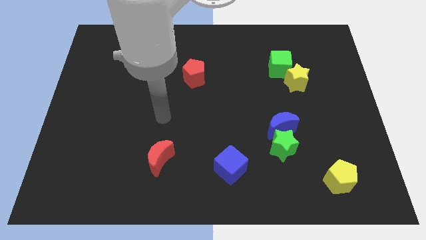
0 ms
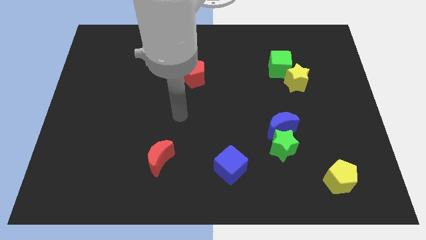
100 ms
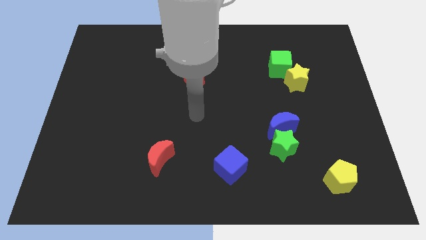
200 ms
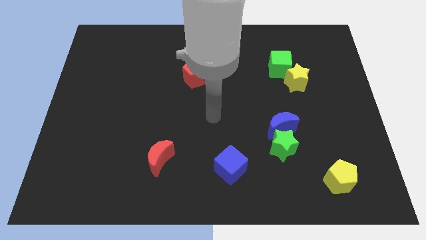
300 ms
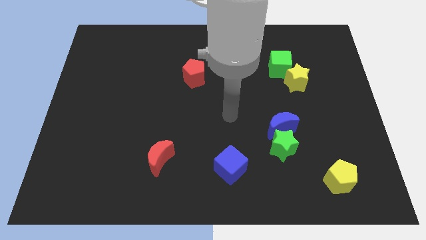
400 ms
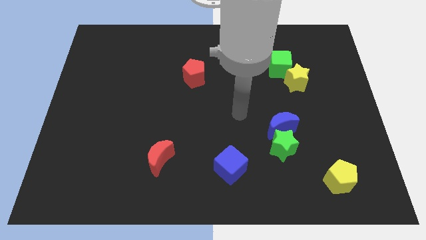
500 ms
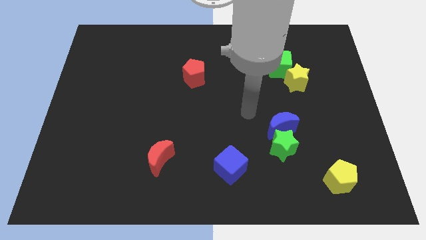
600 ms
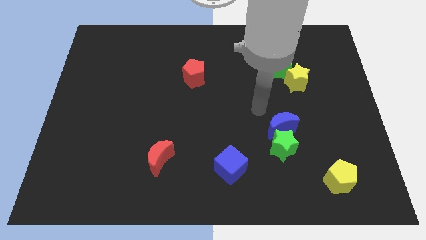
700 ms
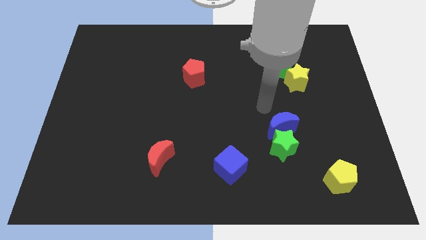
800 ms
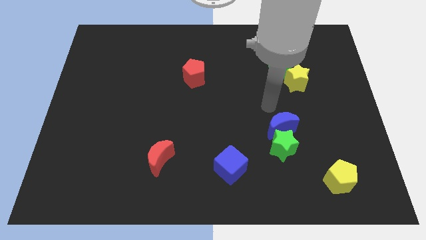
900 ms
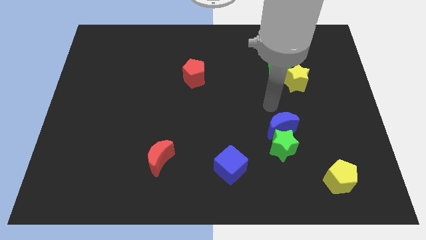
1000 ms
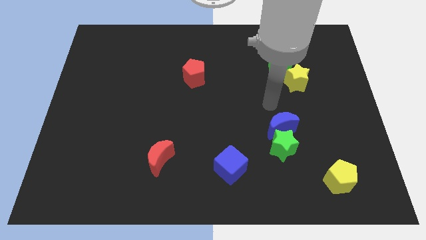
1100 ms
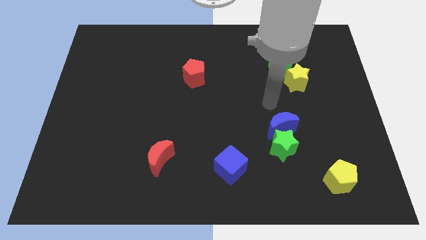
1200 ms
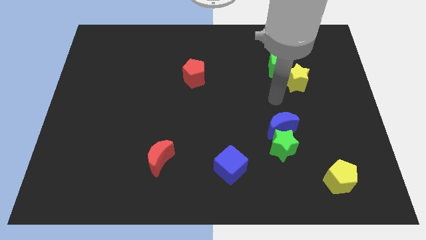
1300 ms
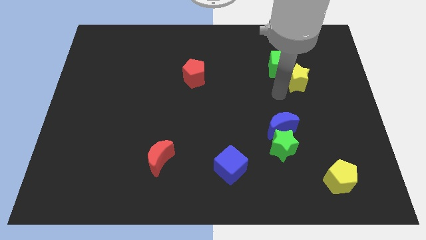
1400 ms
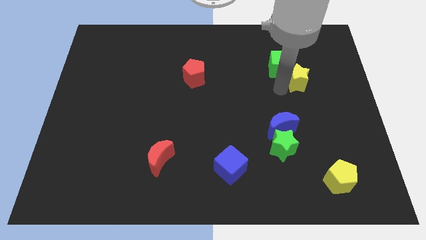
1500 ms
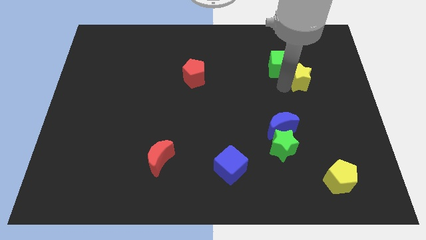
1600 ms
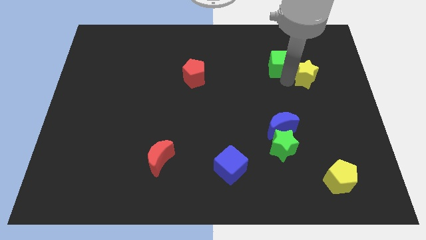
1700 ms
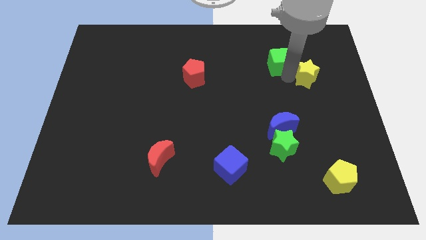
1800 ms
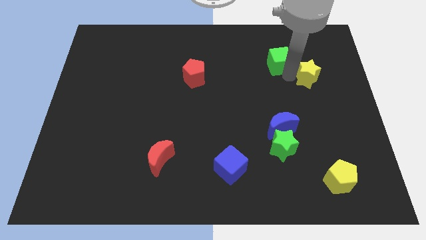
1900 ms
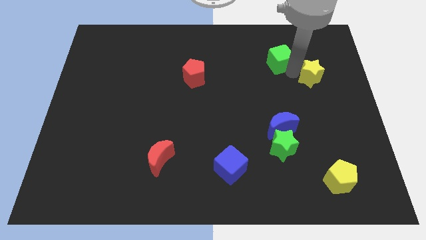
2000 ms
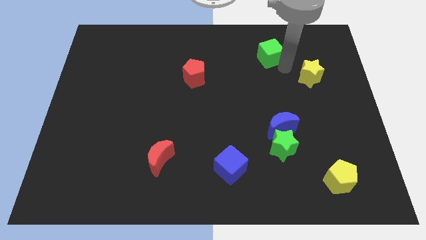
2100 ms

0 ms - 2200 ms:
separate the green cube from the yellow star

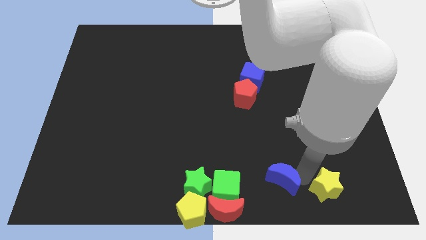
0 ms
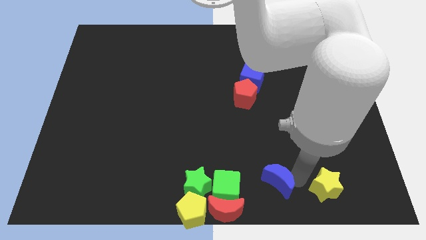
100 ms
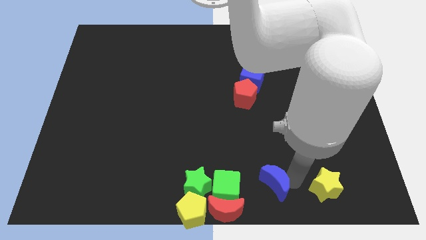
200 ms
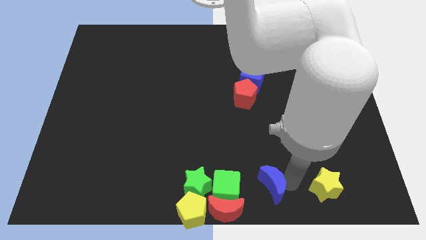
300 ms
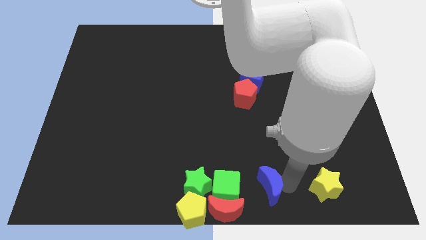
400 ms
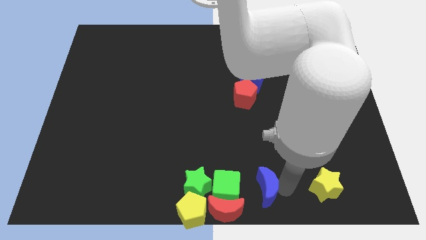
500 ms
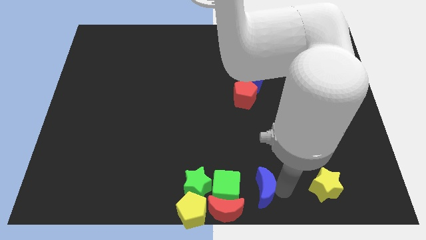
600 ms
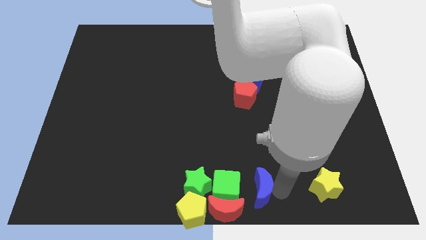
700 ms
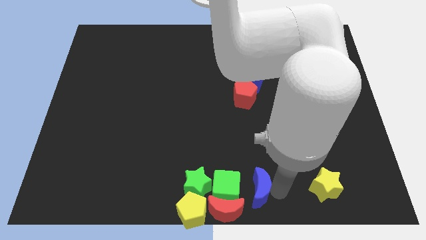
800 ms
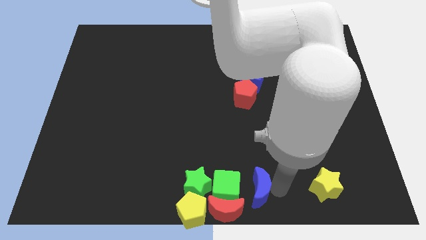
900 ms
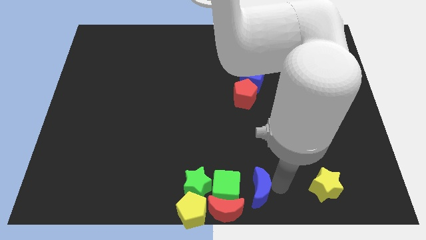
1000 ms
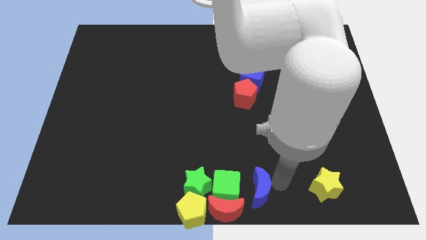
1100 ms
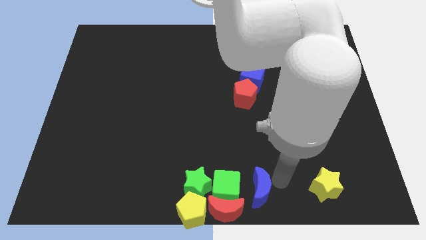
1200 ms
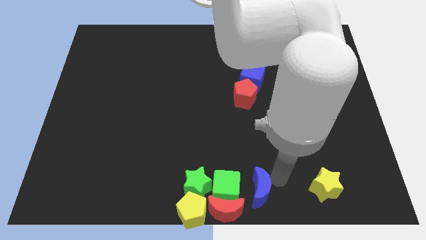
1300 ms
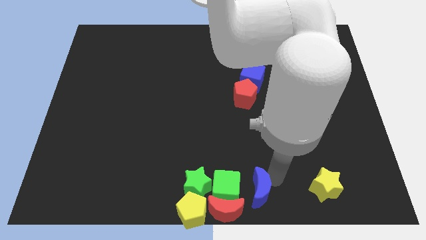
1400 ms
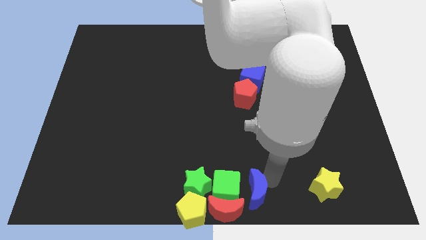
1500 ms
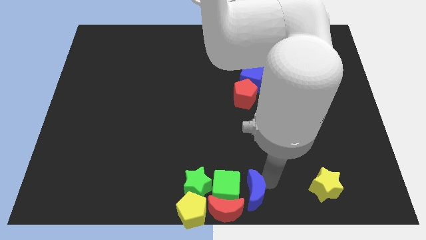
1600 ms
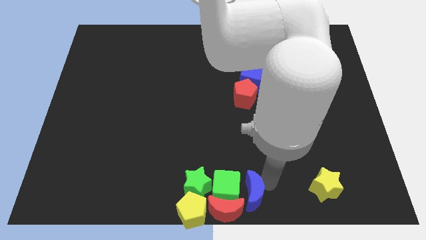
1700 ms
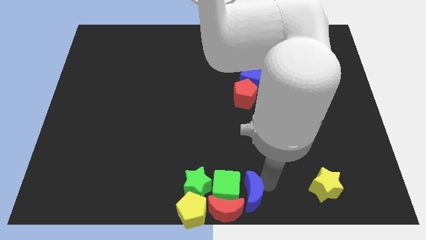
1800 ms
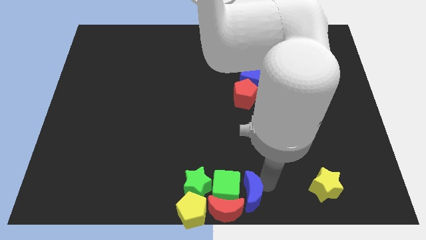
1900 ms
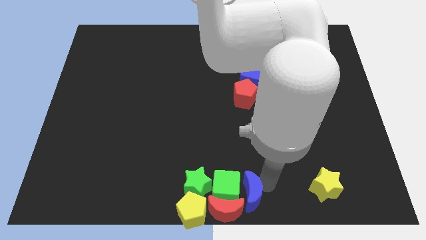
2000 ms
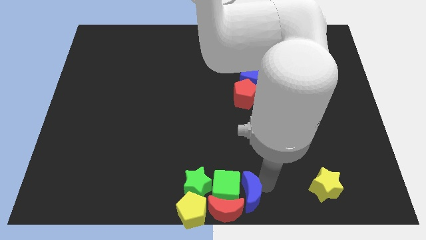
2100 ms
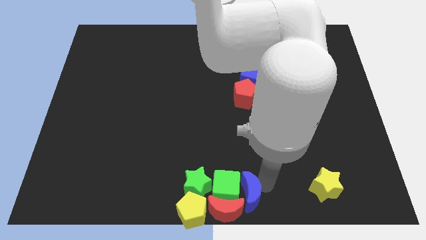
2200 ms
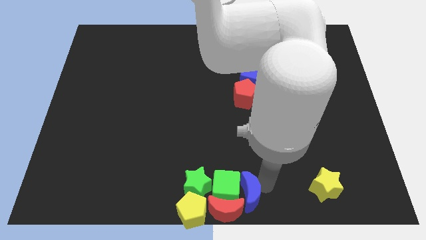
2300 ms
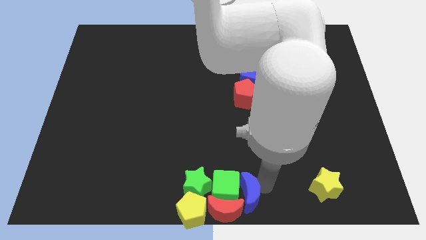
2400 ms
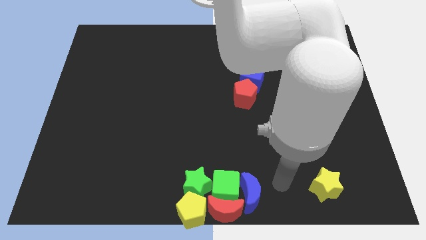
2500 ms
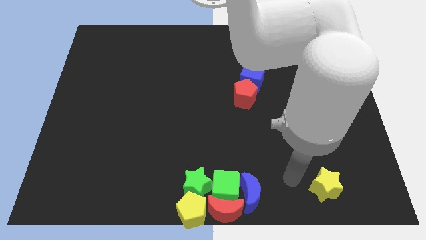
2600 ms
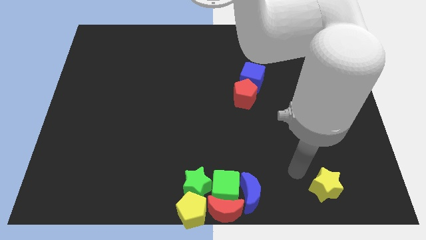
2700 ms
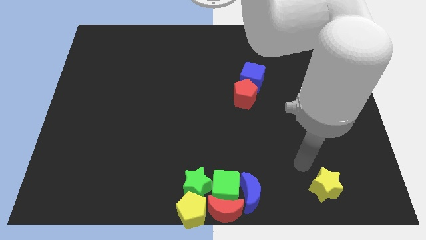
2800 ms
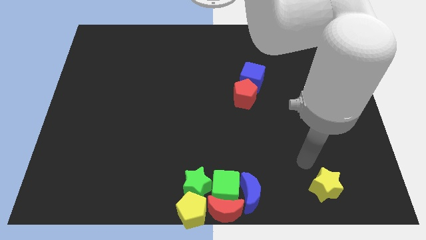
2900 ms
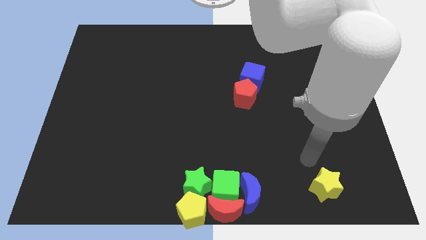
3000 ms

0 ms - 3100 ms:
move the blue moon into the group of blocks

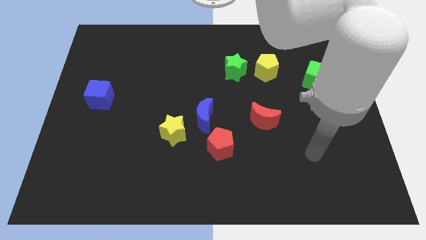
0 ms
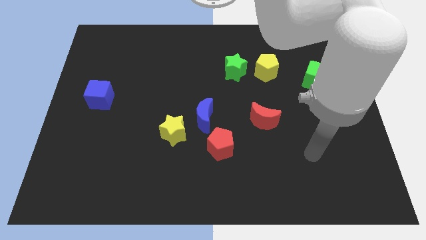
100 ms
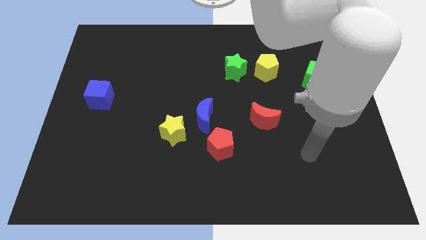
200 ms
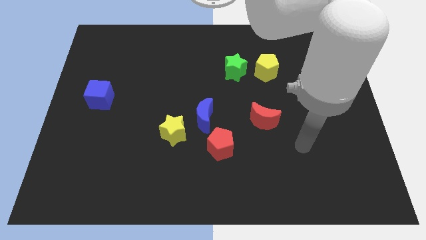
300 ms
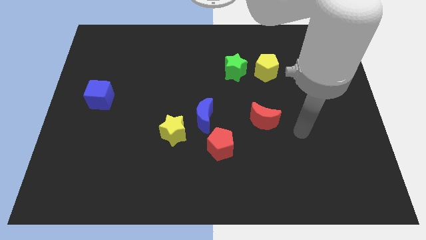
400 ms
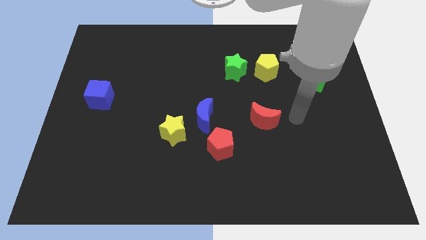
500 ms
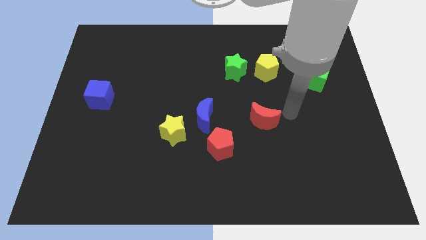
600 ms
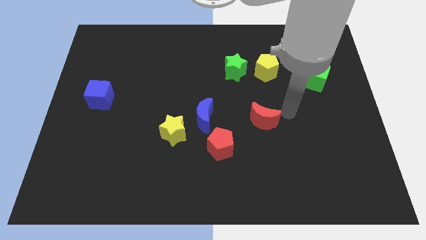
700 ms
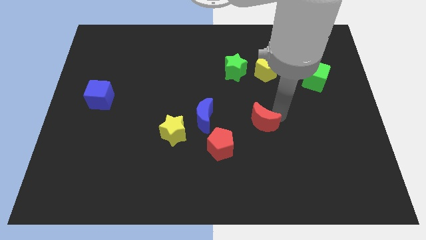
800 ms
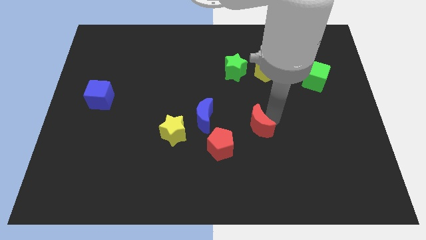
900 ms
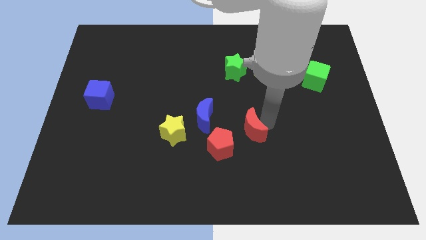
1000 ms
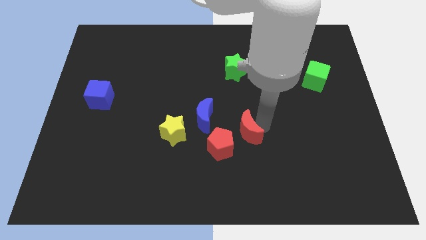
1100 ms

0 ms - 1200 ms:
push the red crescent towards red pentagon

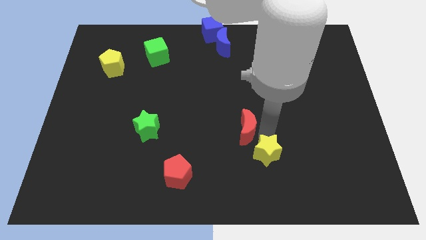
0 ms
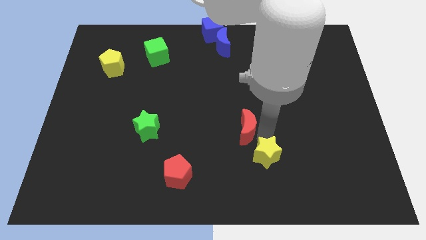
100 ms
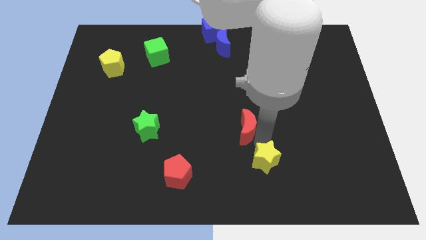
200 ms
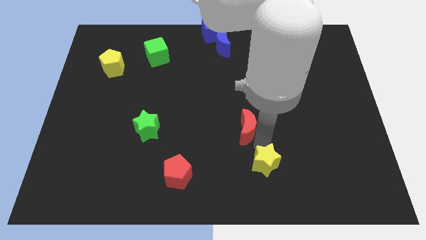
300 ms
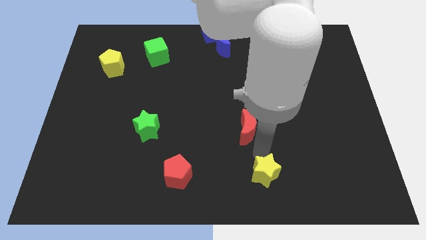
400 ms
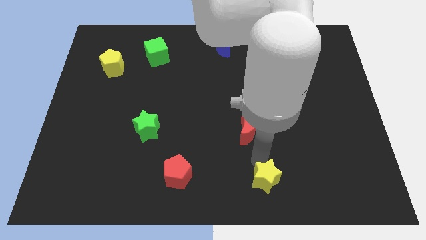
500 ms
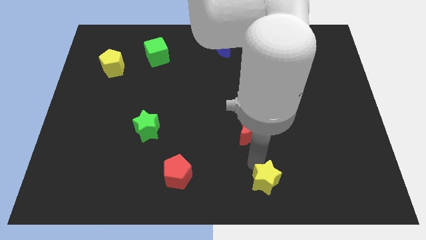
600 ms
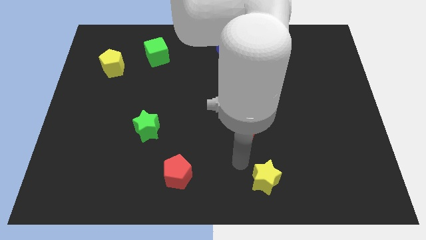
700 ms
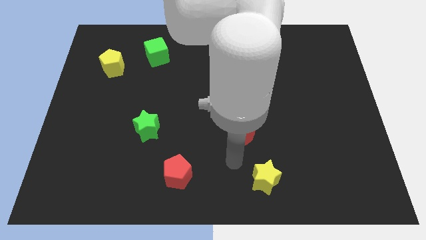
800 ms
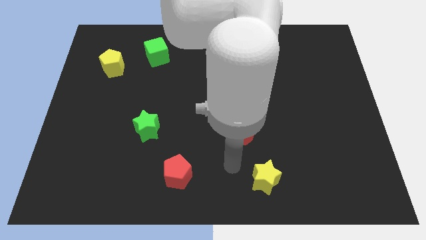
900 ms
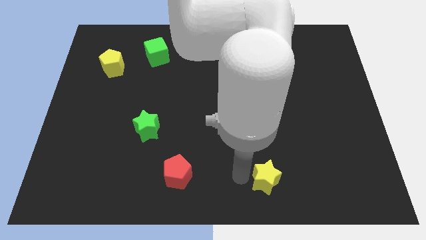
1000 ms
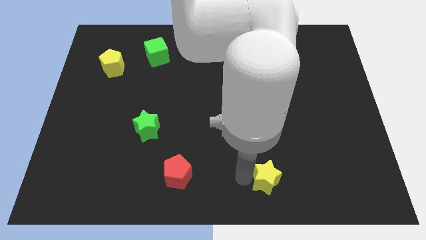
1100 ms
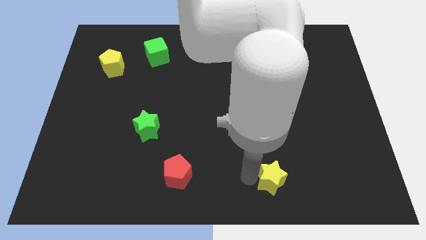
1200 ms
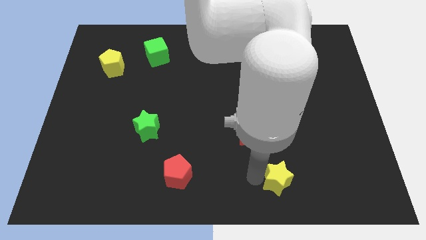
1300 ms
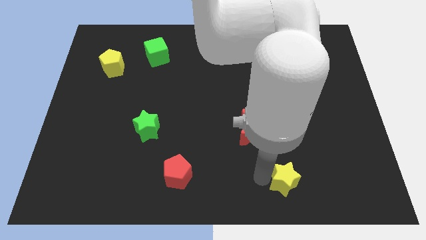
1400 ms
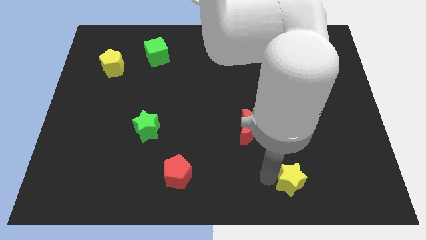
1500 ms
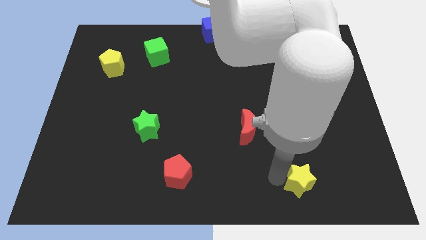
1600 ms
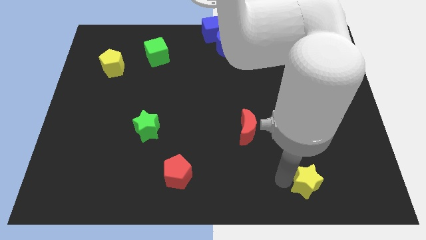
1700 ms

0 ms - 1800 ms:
place the yellow star right to the red pentagon

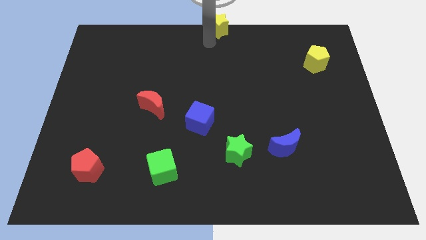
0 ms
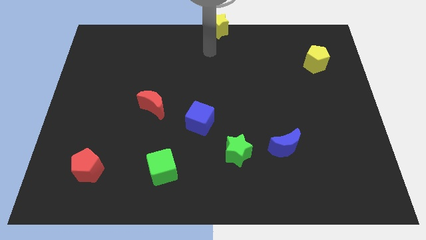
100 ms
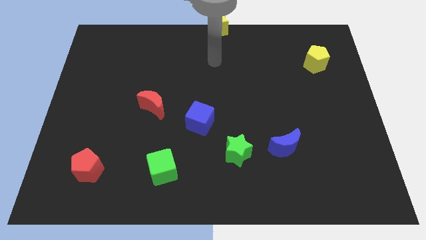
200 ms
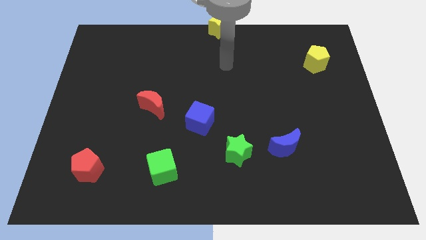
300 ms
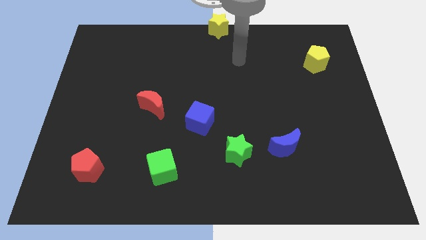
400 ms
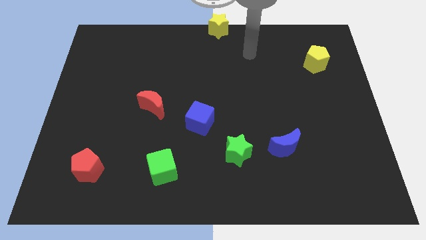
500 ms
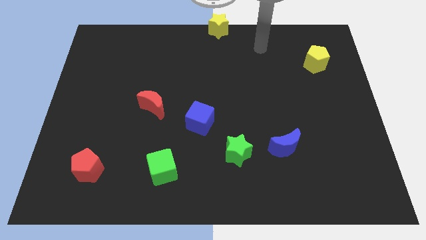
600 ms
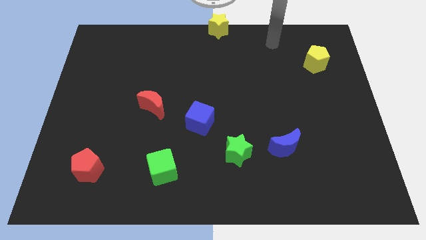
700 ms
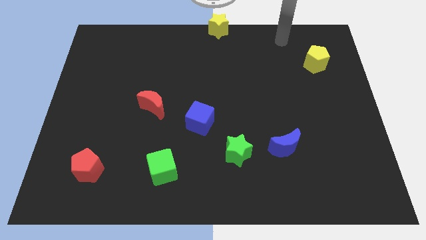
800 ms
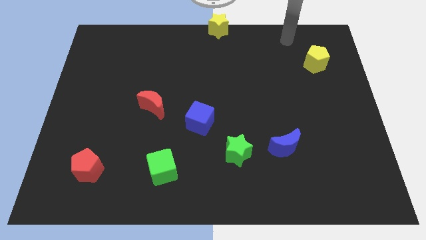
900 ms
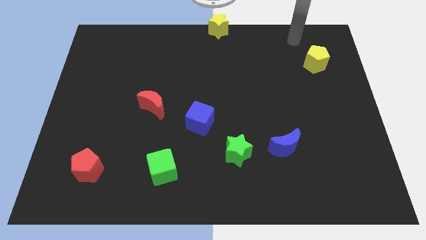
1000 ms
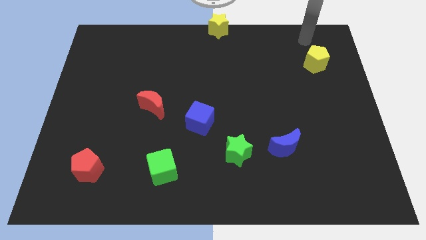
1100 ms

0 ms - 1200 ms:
move your arm away from the yellow star
